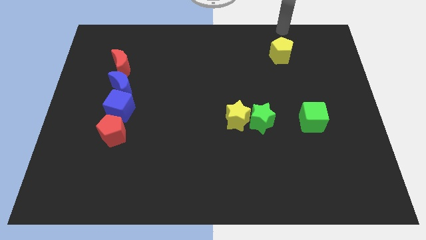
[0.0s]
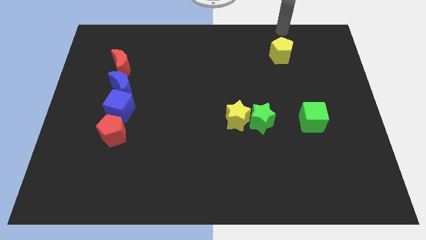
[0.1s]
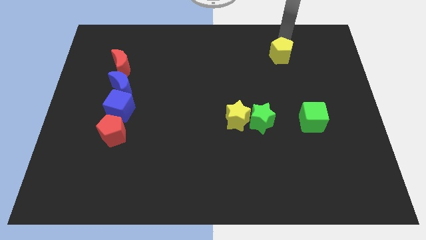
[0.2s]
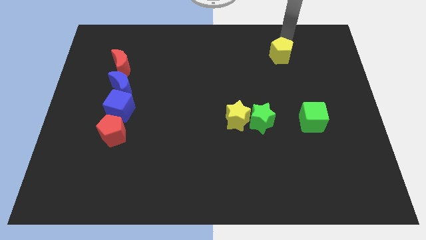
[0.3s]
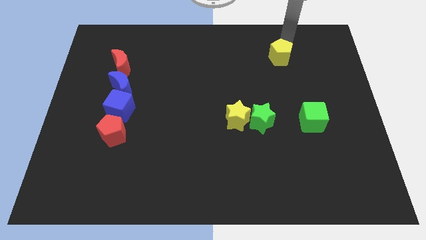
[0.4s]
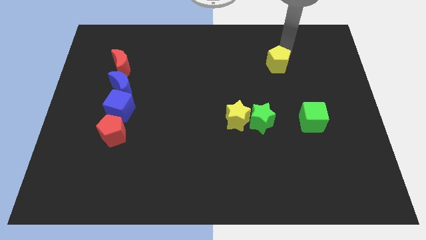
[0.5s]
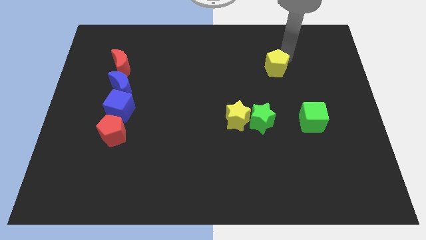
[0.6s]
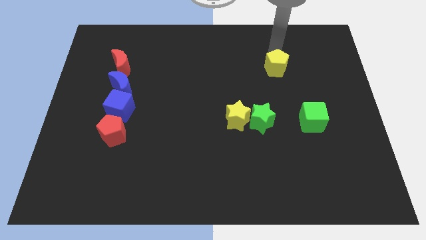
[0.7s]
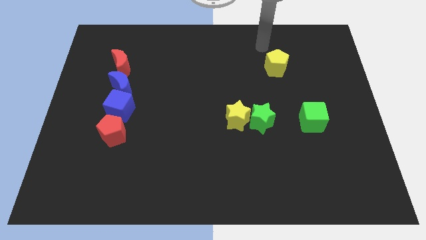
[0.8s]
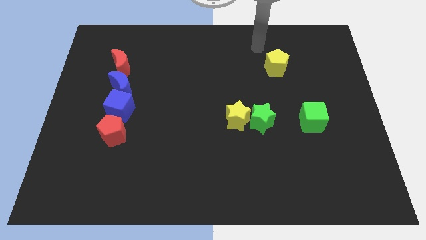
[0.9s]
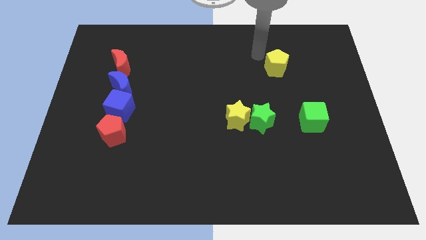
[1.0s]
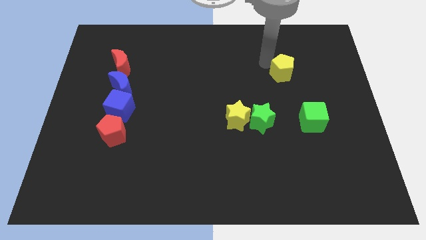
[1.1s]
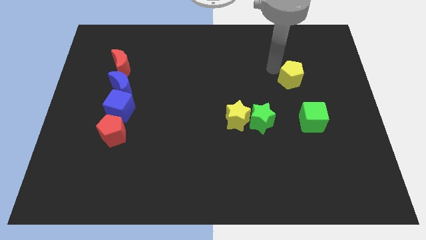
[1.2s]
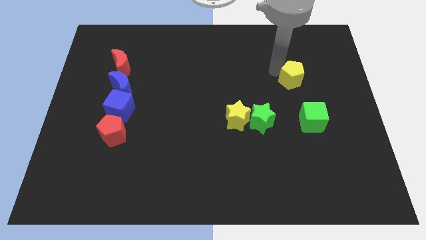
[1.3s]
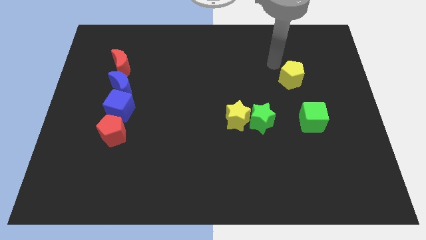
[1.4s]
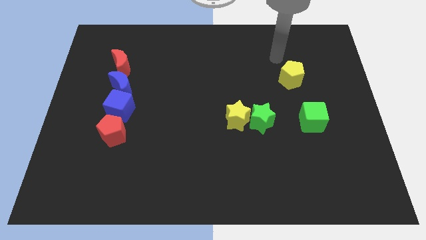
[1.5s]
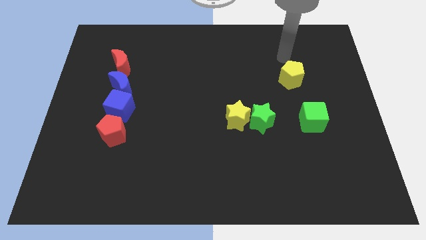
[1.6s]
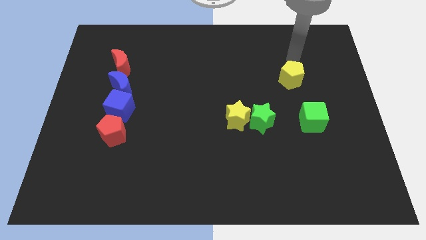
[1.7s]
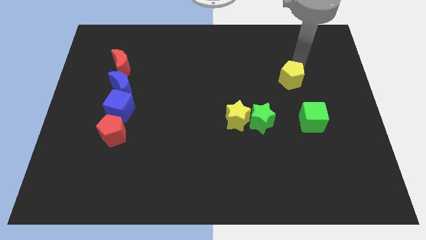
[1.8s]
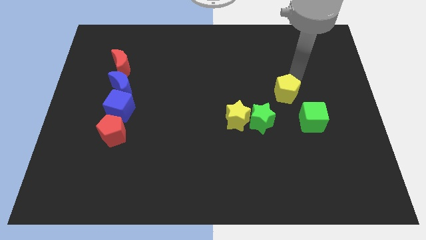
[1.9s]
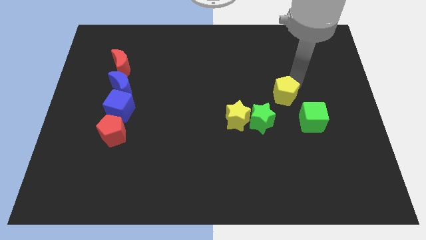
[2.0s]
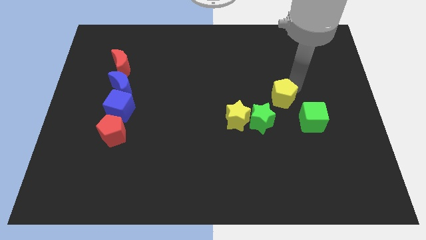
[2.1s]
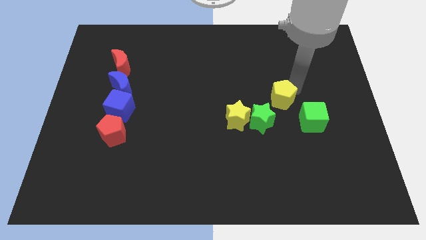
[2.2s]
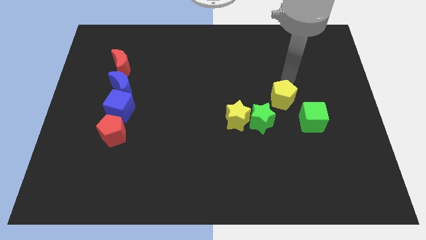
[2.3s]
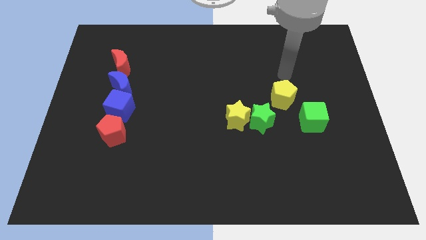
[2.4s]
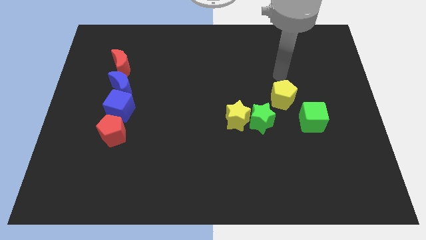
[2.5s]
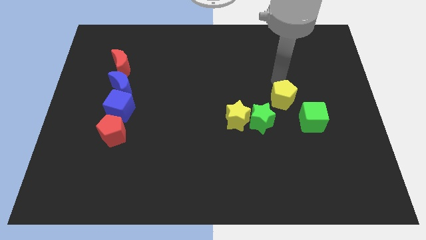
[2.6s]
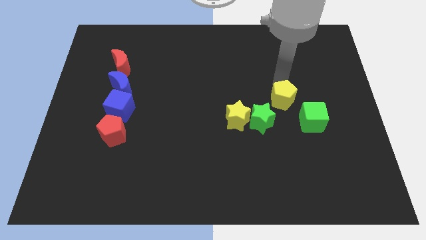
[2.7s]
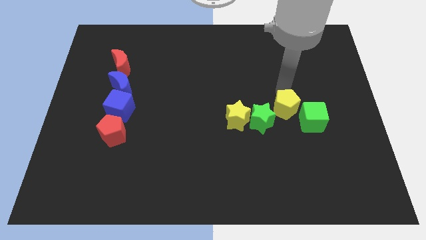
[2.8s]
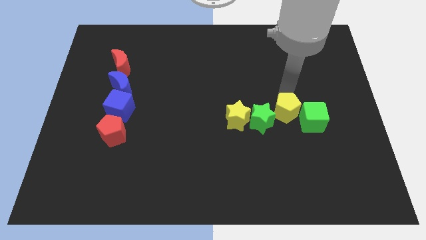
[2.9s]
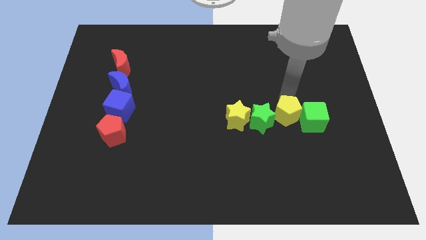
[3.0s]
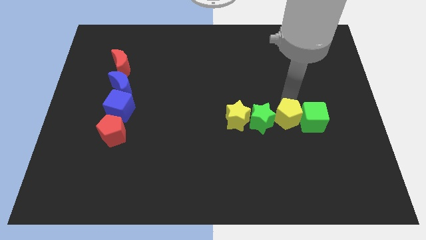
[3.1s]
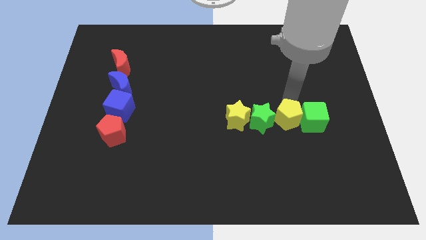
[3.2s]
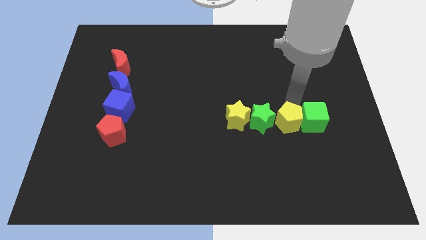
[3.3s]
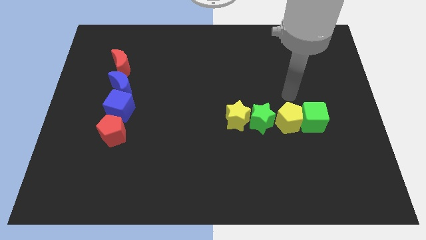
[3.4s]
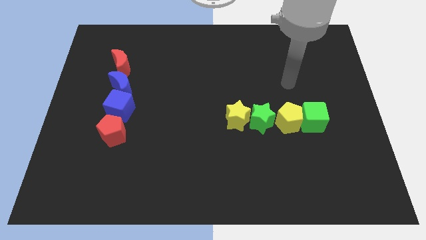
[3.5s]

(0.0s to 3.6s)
place the yellow pentagon in between the green star and the green cube

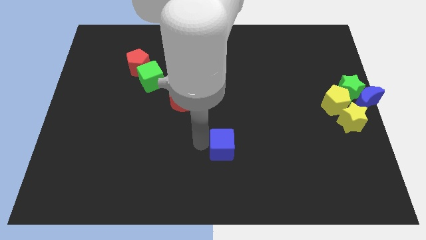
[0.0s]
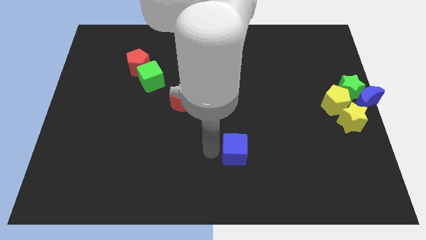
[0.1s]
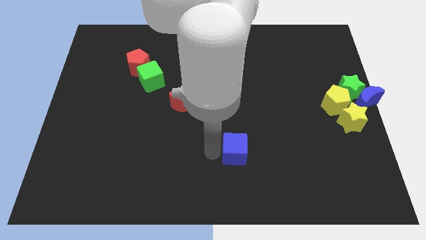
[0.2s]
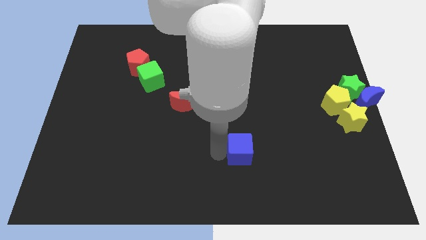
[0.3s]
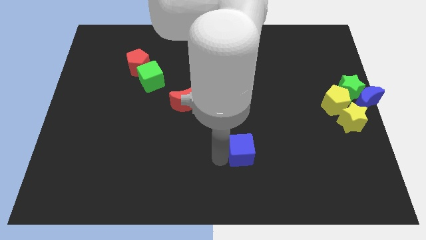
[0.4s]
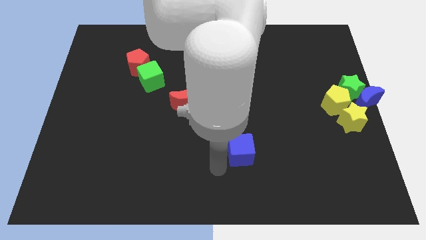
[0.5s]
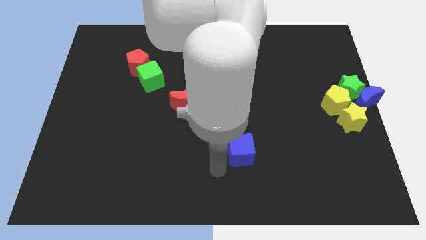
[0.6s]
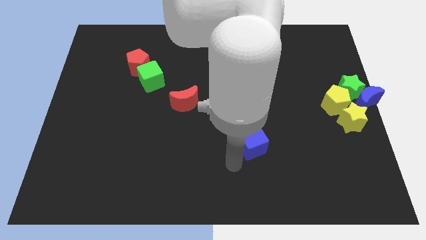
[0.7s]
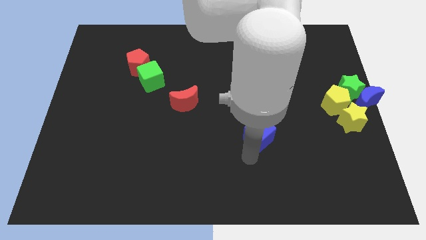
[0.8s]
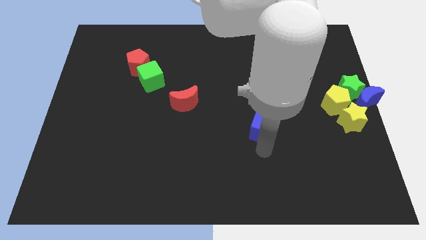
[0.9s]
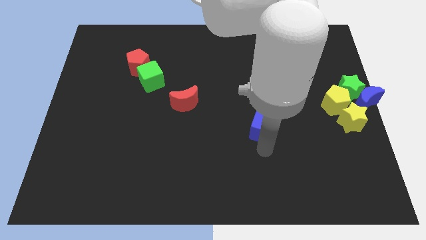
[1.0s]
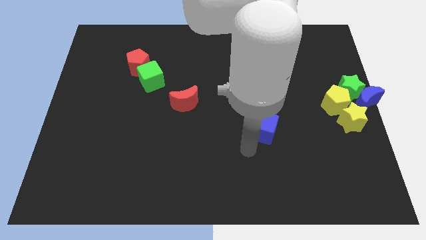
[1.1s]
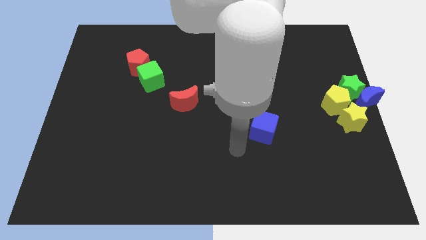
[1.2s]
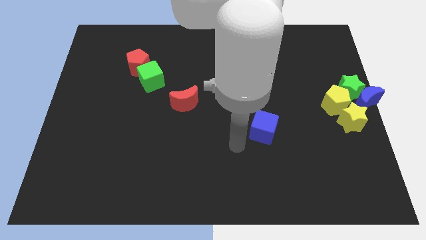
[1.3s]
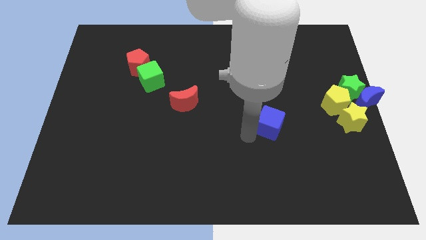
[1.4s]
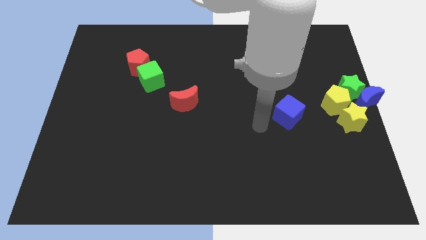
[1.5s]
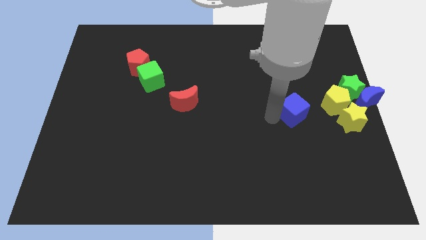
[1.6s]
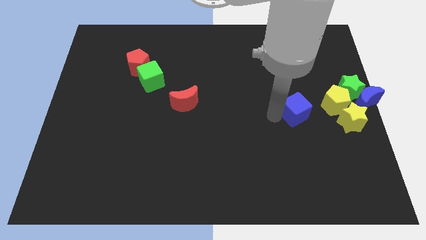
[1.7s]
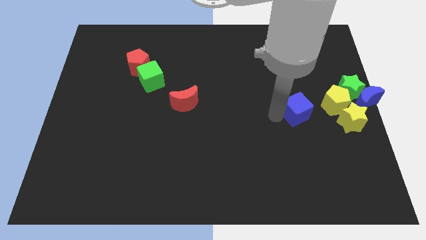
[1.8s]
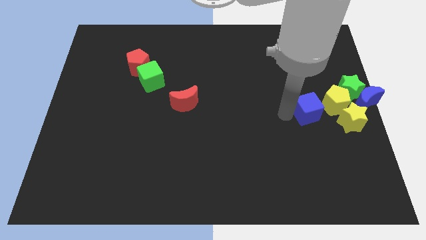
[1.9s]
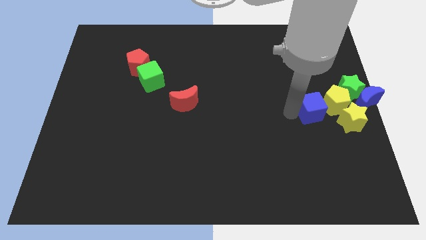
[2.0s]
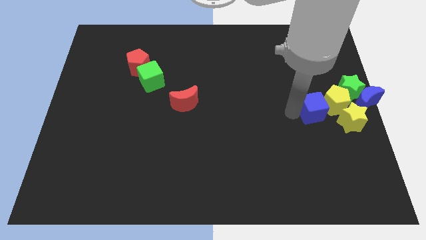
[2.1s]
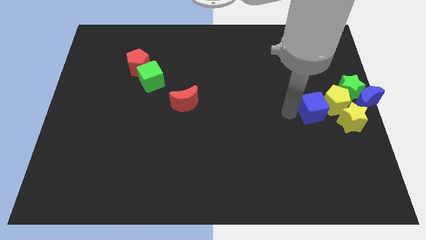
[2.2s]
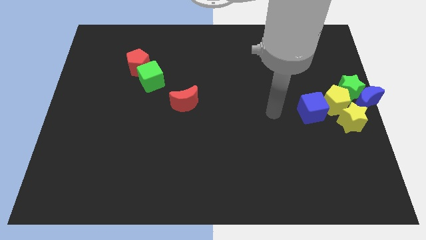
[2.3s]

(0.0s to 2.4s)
move blue cube into group of blocks

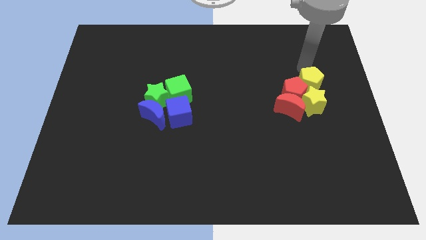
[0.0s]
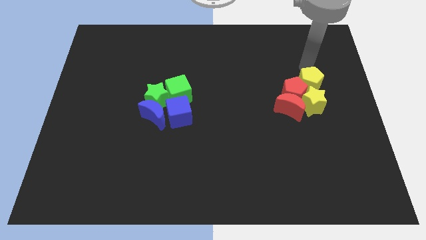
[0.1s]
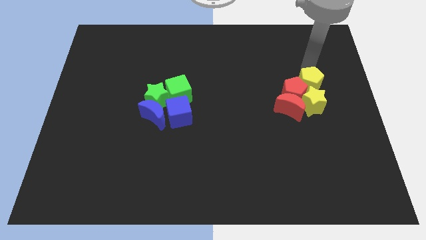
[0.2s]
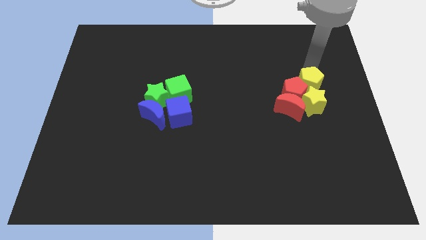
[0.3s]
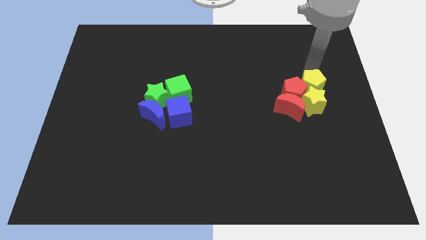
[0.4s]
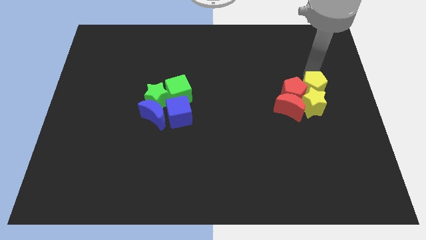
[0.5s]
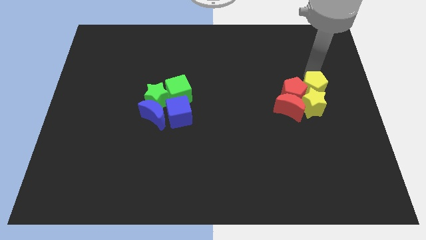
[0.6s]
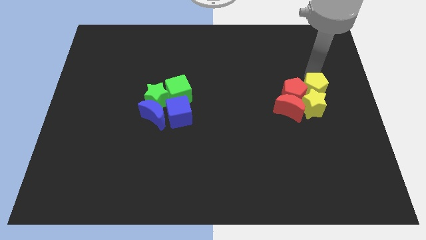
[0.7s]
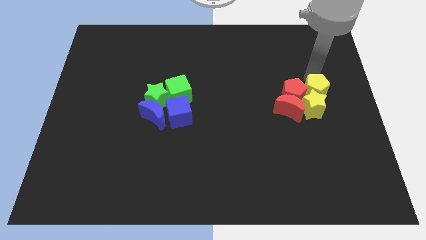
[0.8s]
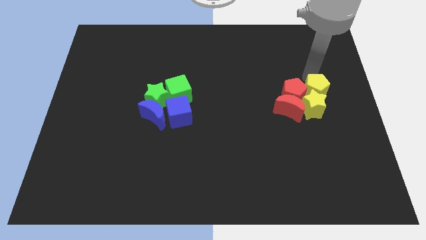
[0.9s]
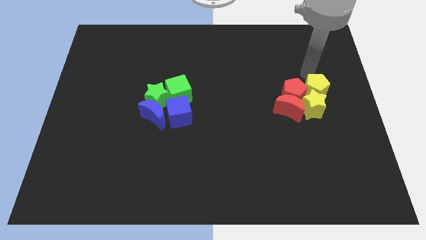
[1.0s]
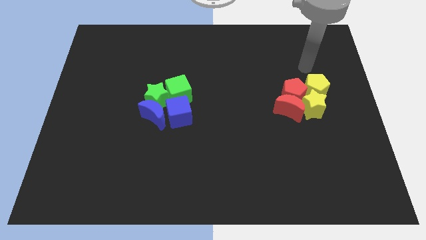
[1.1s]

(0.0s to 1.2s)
push the yellow pentagon into the yellow star

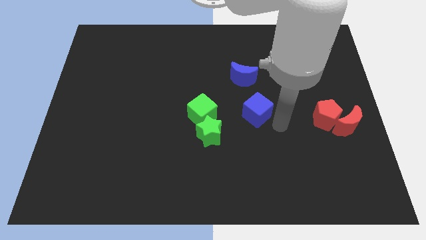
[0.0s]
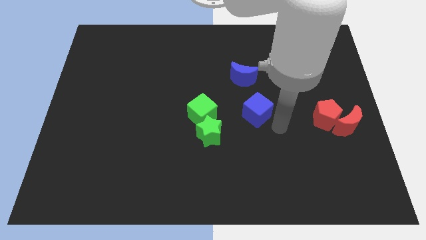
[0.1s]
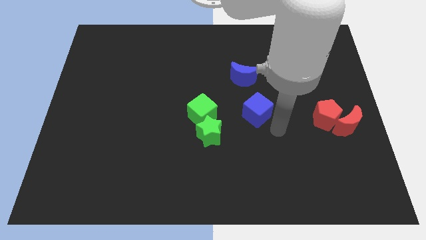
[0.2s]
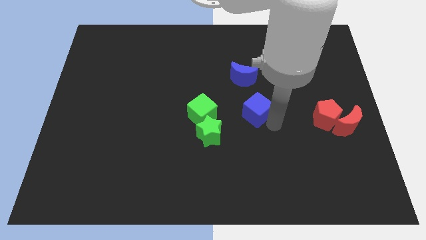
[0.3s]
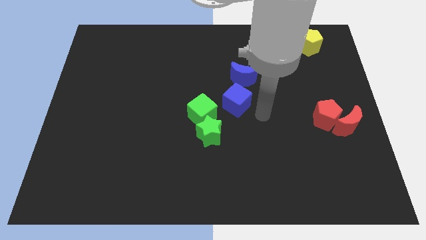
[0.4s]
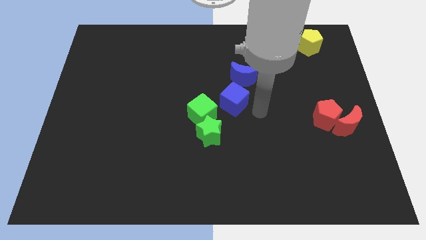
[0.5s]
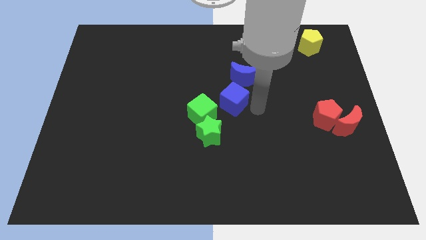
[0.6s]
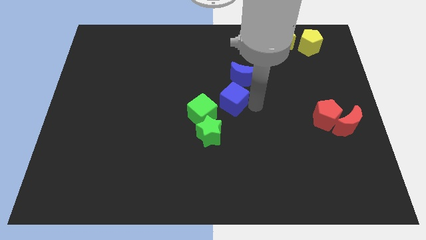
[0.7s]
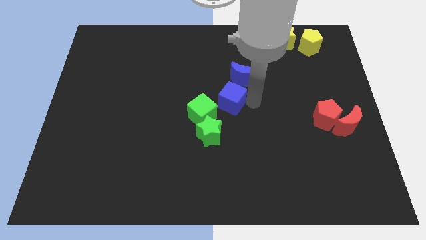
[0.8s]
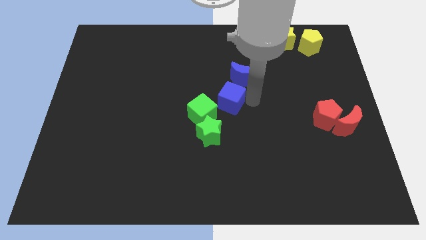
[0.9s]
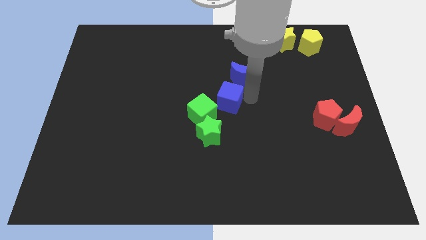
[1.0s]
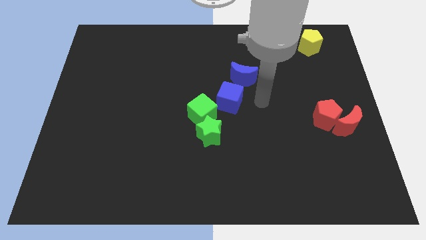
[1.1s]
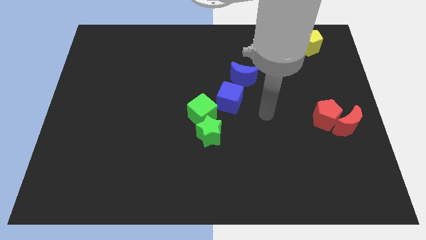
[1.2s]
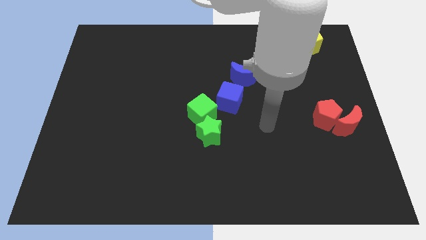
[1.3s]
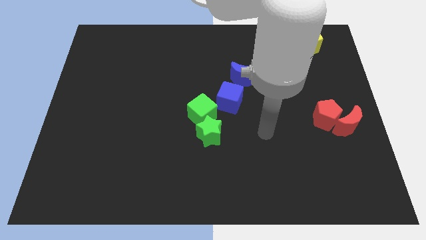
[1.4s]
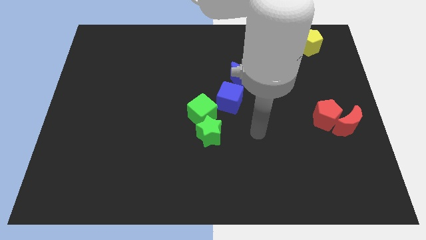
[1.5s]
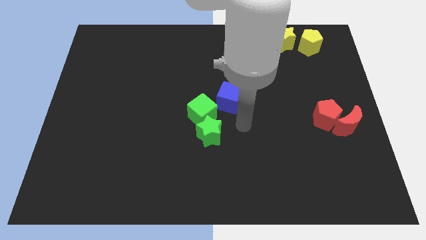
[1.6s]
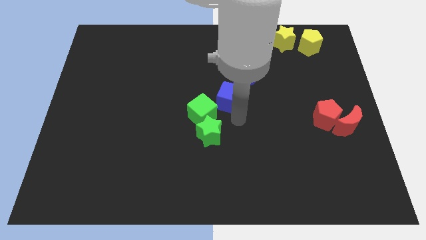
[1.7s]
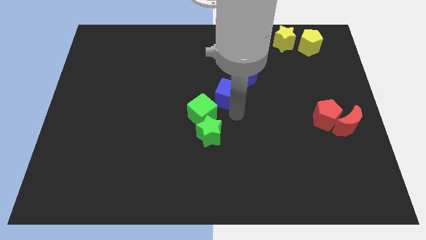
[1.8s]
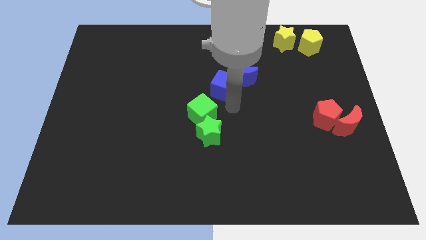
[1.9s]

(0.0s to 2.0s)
place the blue cube between green cube and blue moon
